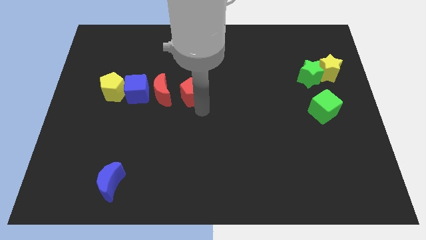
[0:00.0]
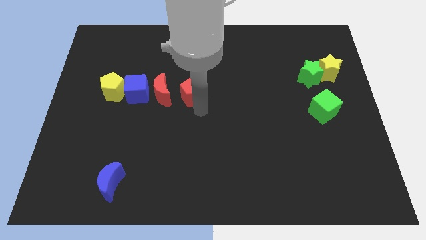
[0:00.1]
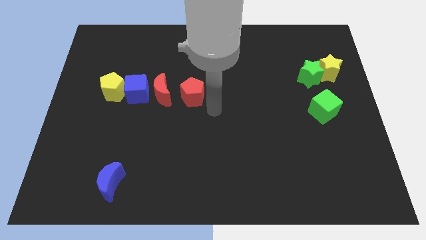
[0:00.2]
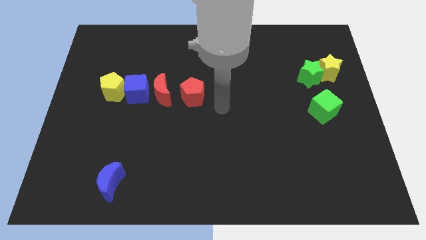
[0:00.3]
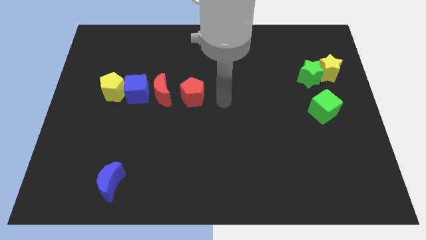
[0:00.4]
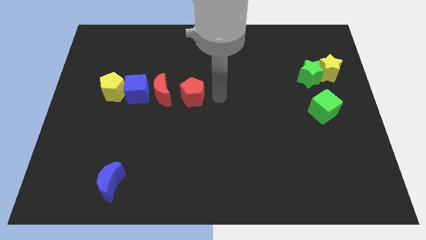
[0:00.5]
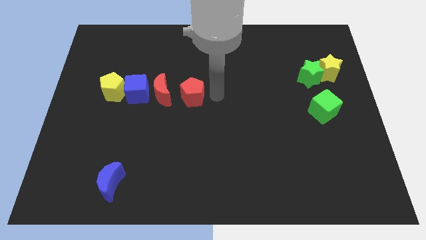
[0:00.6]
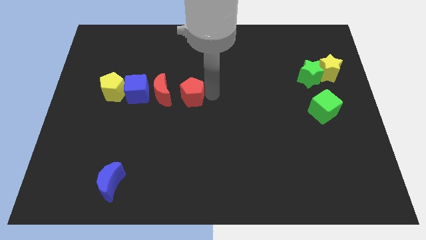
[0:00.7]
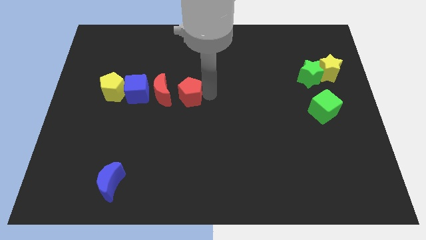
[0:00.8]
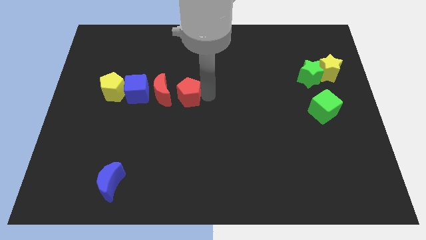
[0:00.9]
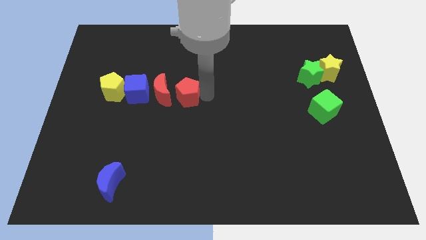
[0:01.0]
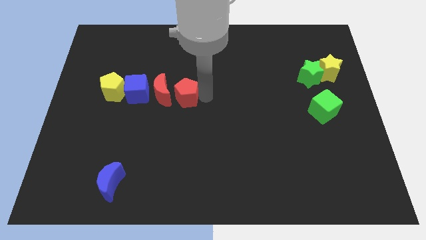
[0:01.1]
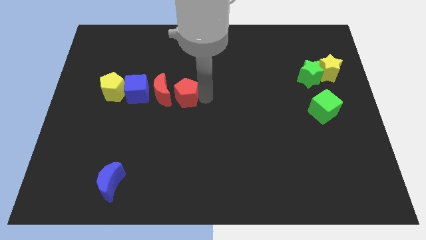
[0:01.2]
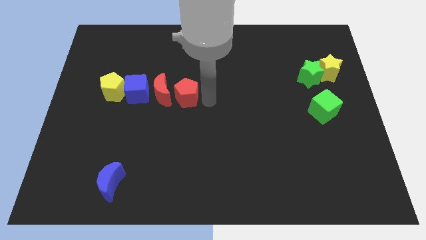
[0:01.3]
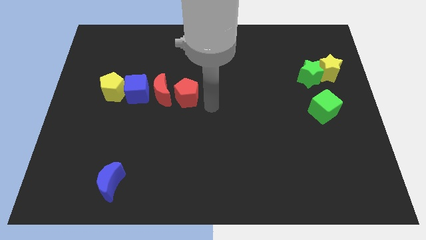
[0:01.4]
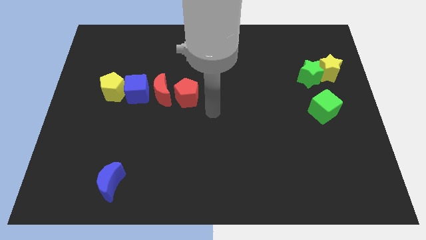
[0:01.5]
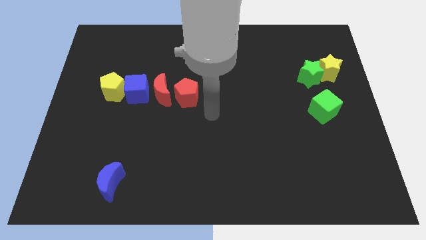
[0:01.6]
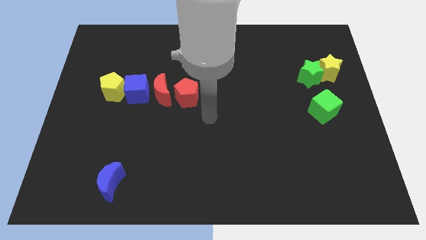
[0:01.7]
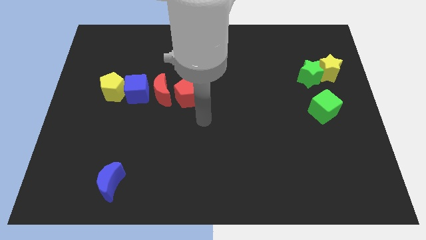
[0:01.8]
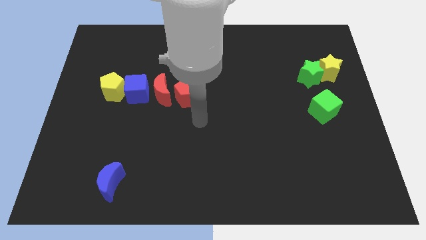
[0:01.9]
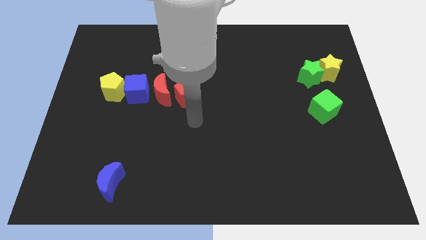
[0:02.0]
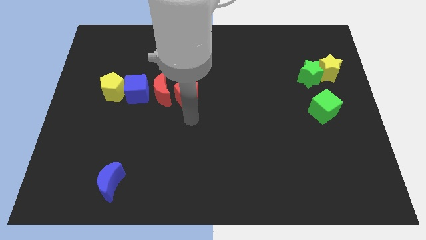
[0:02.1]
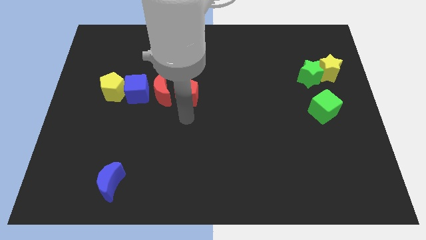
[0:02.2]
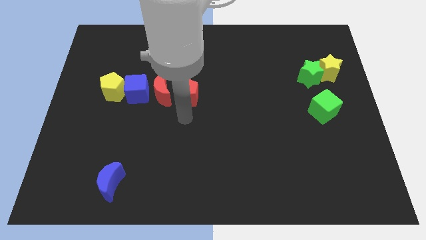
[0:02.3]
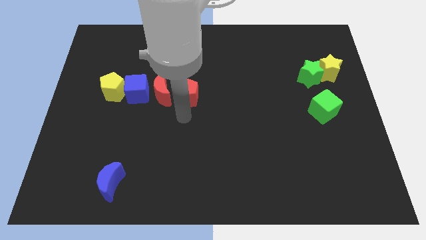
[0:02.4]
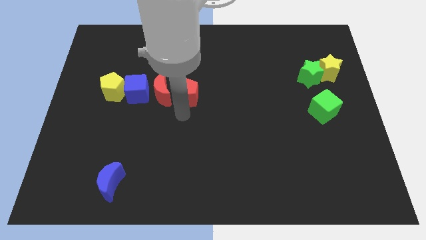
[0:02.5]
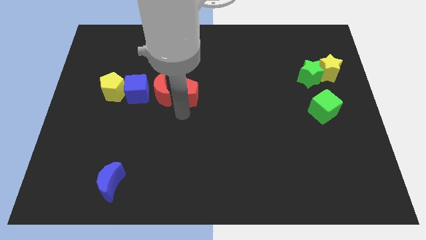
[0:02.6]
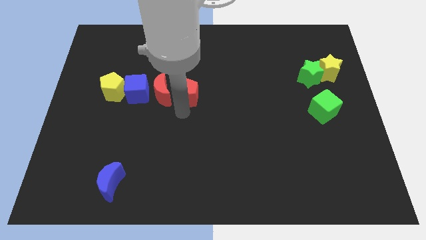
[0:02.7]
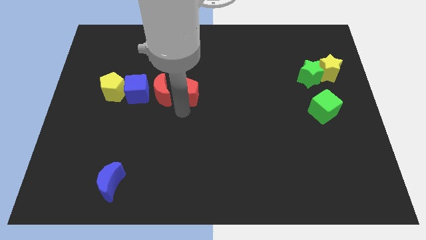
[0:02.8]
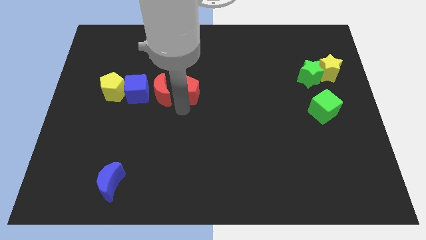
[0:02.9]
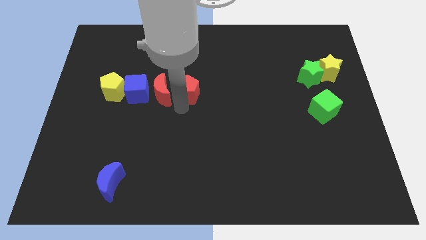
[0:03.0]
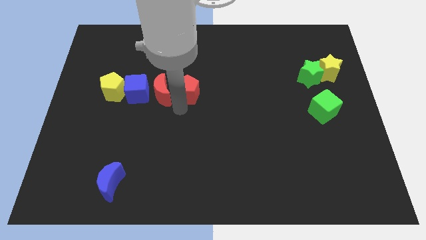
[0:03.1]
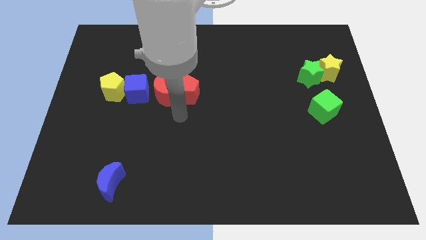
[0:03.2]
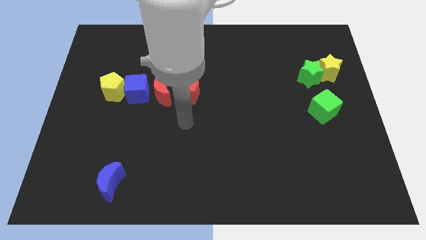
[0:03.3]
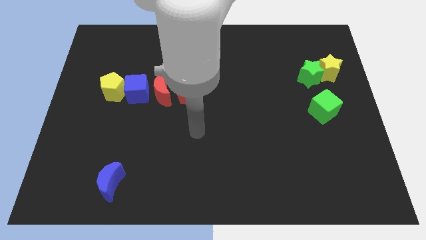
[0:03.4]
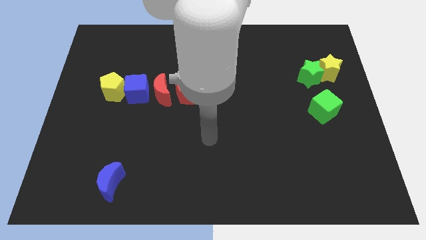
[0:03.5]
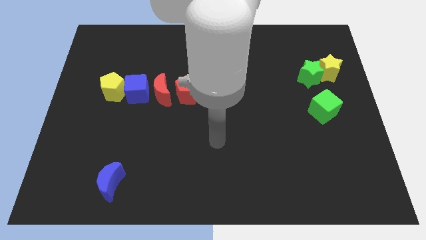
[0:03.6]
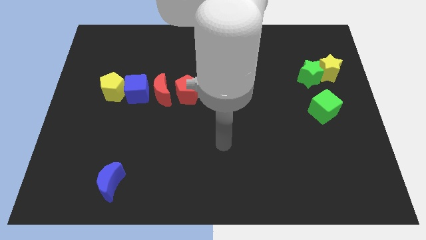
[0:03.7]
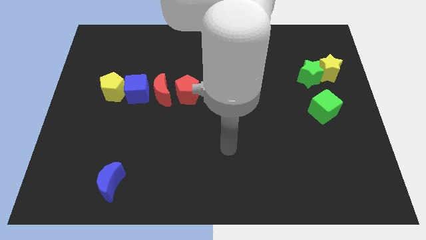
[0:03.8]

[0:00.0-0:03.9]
adjust red pentagon in the line

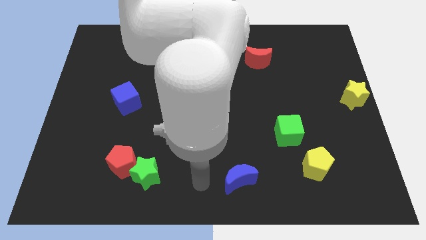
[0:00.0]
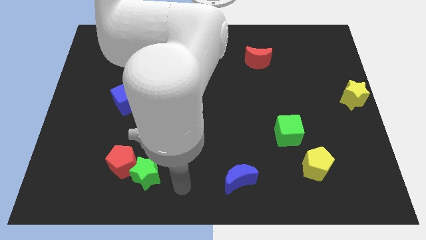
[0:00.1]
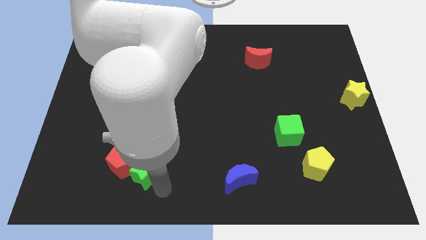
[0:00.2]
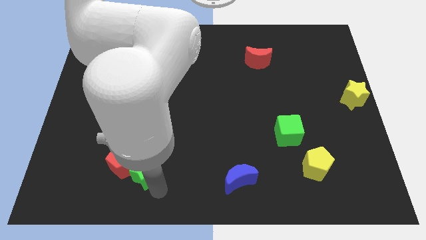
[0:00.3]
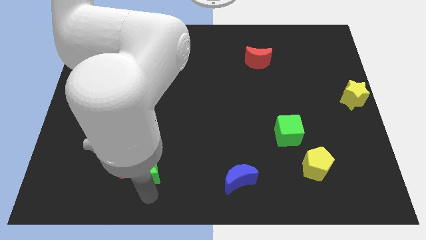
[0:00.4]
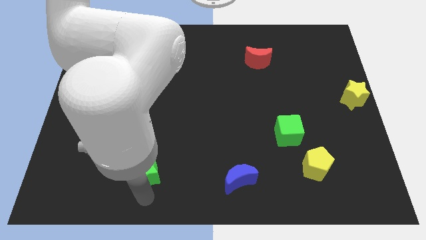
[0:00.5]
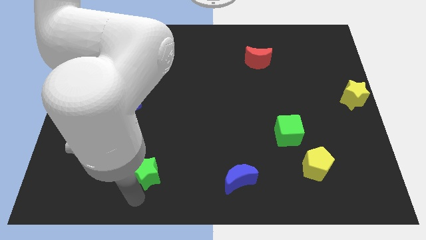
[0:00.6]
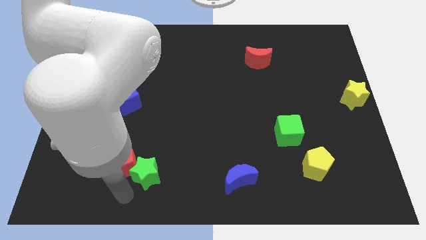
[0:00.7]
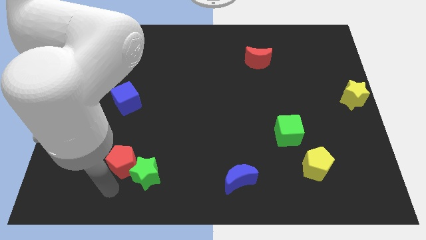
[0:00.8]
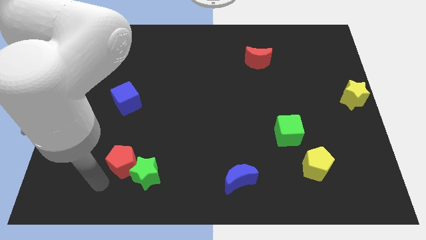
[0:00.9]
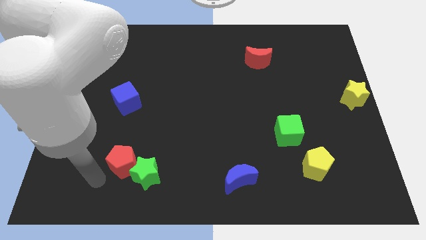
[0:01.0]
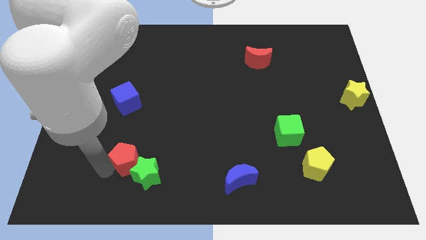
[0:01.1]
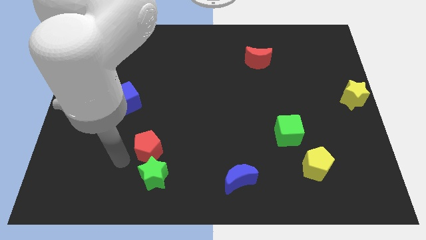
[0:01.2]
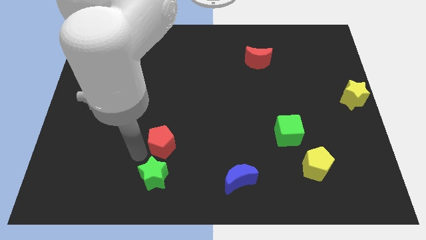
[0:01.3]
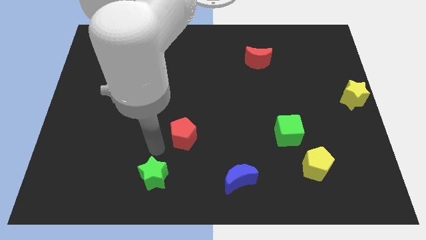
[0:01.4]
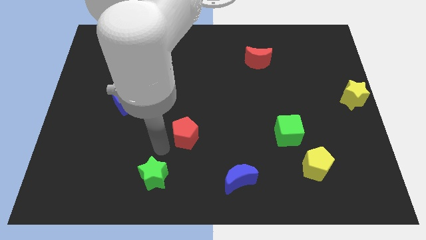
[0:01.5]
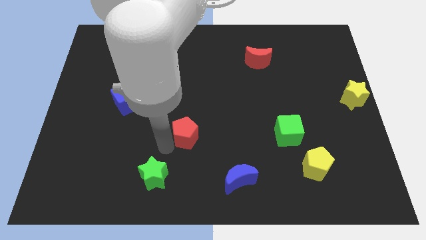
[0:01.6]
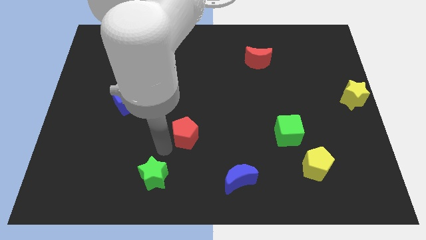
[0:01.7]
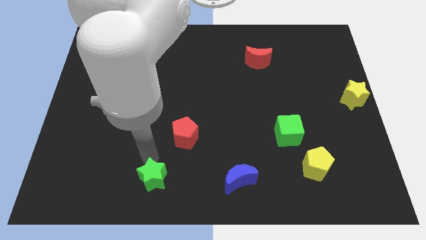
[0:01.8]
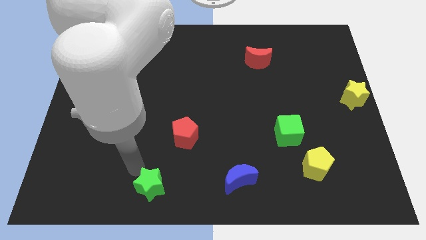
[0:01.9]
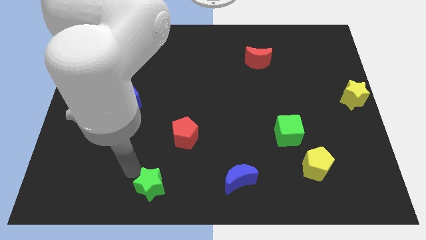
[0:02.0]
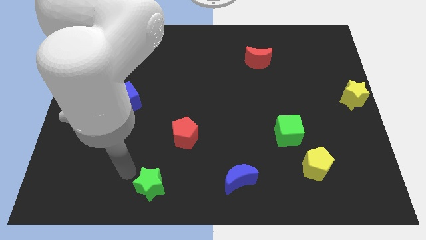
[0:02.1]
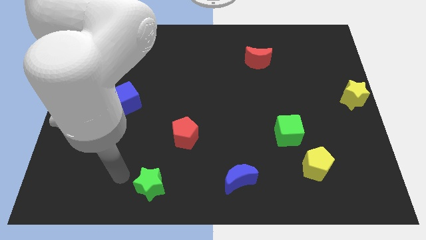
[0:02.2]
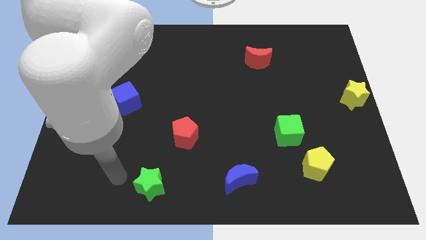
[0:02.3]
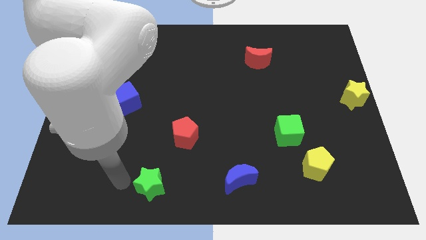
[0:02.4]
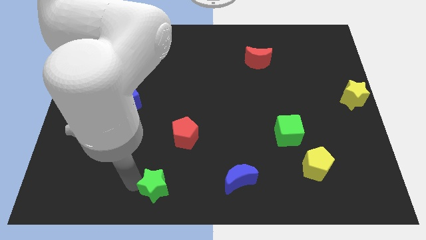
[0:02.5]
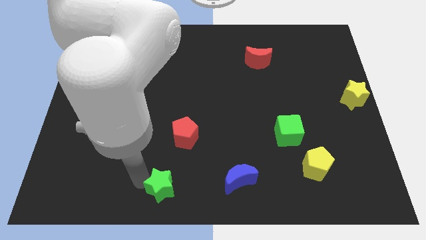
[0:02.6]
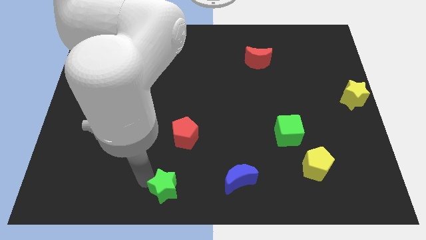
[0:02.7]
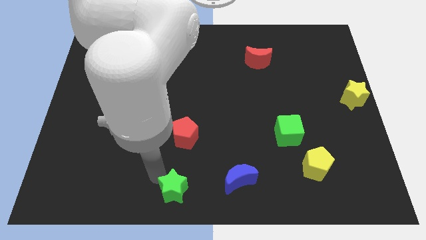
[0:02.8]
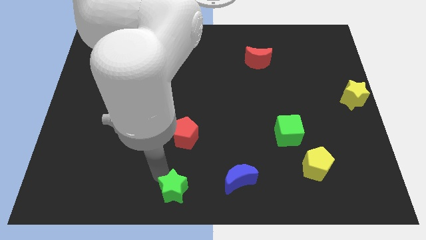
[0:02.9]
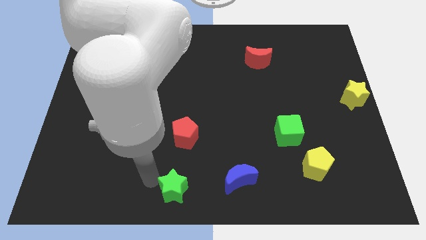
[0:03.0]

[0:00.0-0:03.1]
separate green star and red pentagon

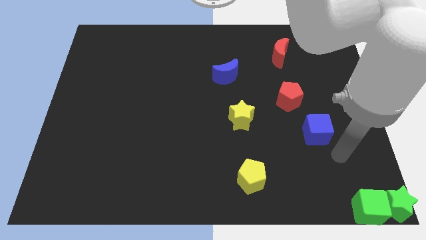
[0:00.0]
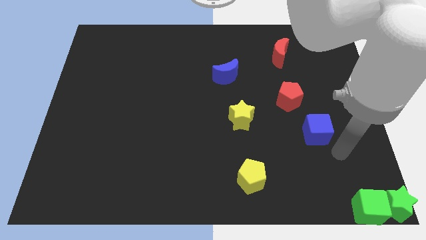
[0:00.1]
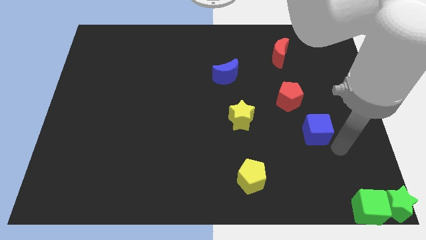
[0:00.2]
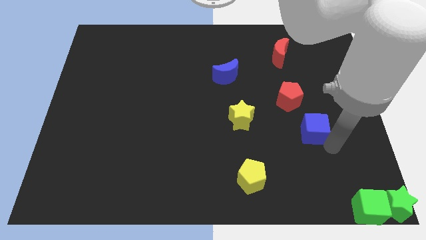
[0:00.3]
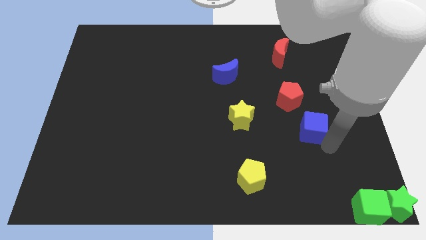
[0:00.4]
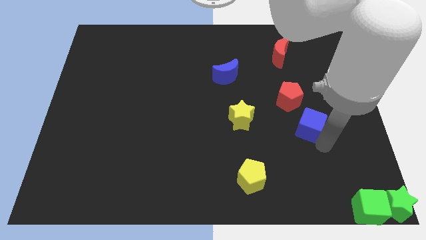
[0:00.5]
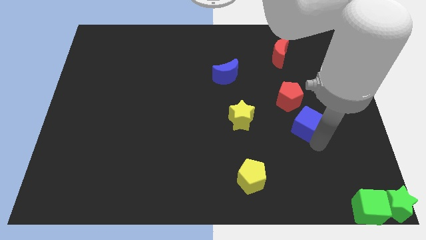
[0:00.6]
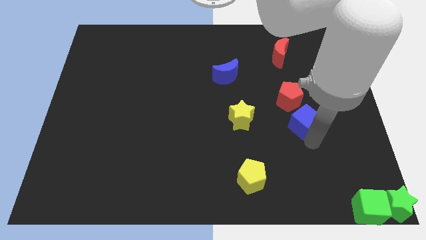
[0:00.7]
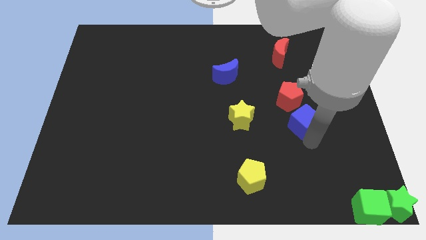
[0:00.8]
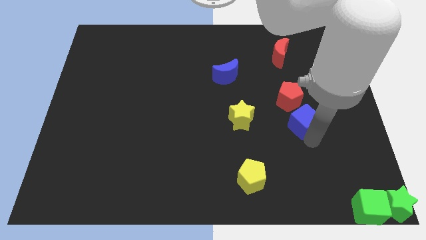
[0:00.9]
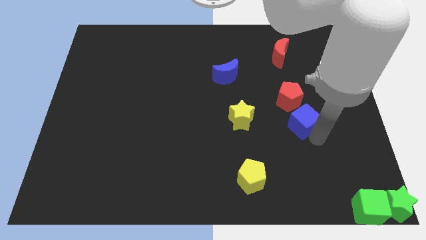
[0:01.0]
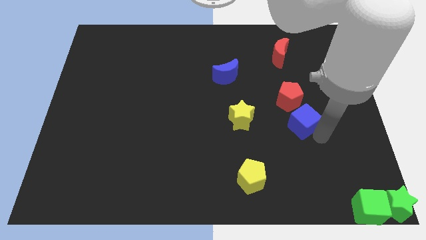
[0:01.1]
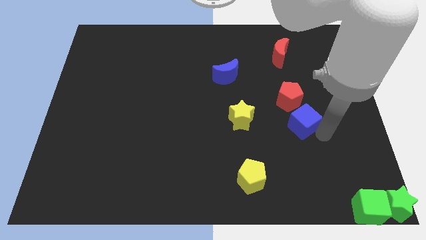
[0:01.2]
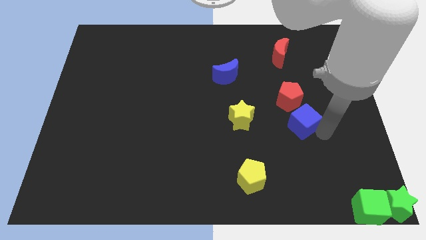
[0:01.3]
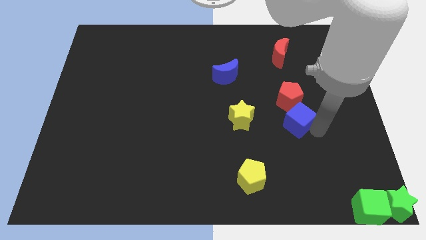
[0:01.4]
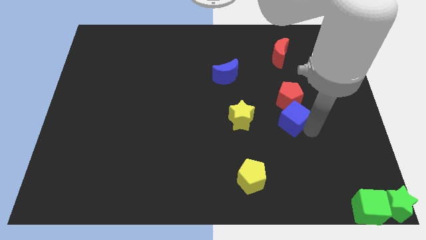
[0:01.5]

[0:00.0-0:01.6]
place blue cube to the bottom of red pentagon

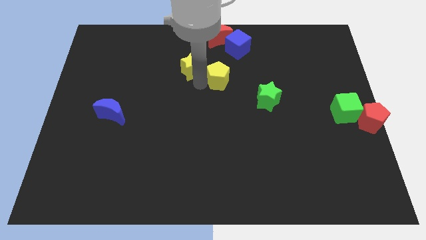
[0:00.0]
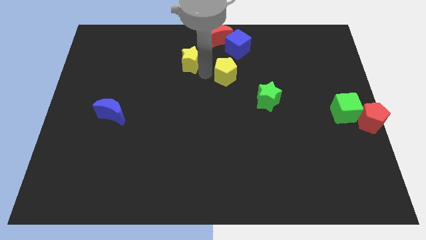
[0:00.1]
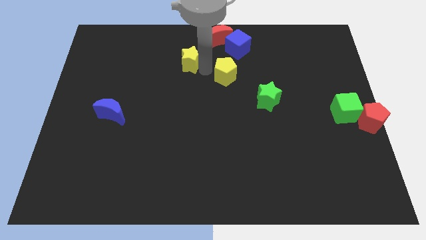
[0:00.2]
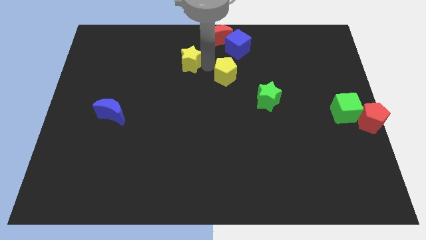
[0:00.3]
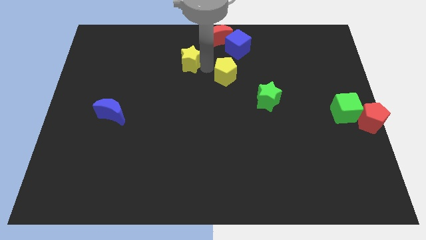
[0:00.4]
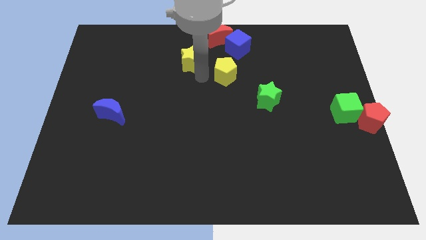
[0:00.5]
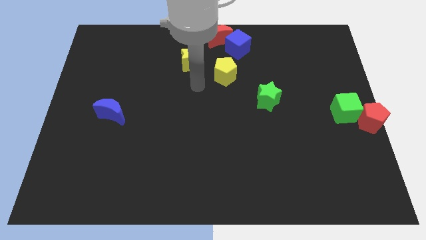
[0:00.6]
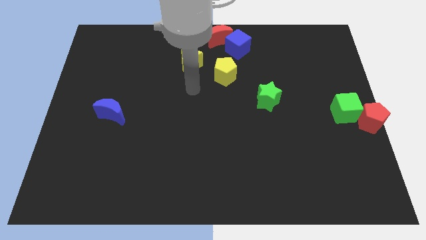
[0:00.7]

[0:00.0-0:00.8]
separate the yellow star and yellow pentagon
